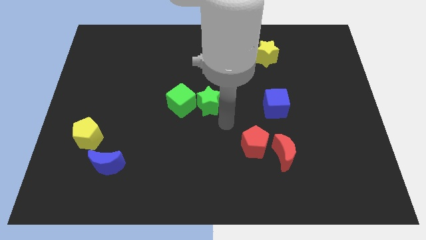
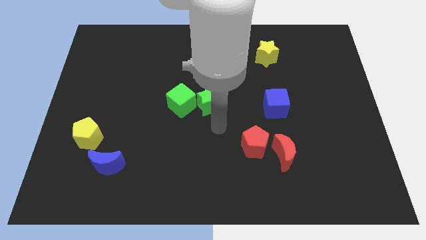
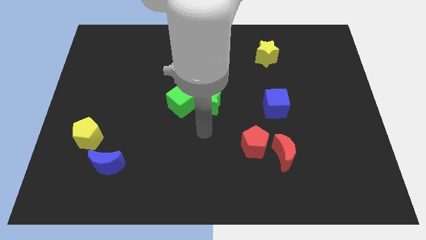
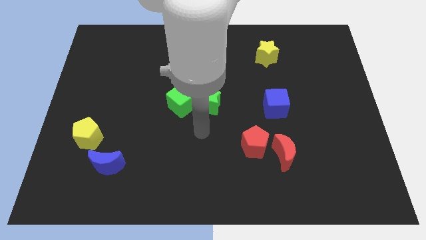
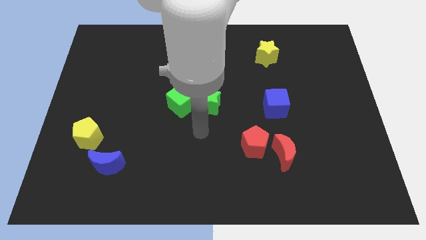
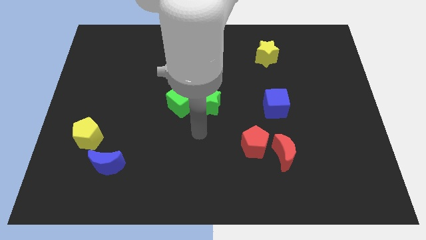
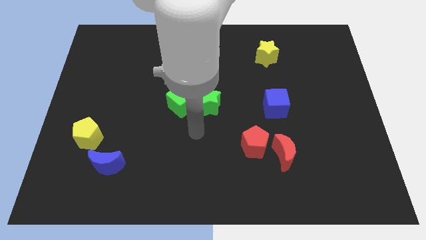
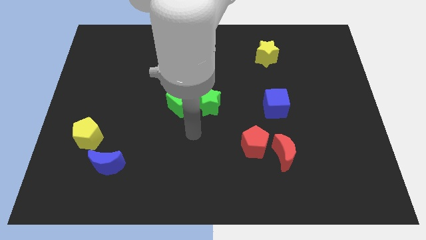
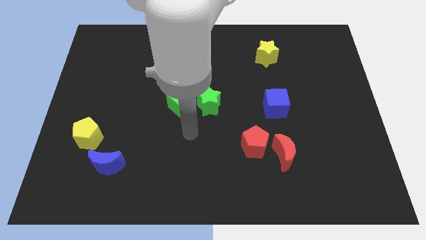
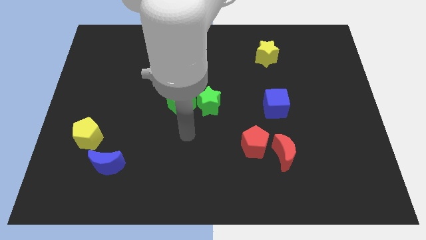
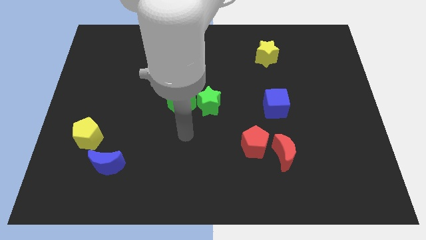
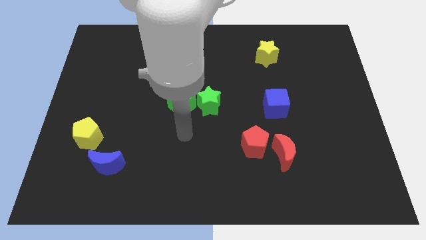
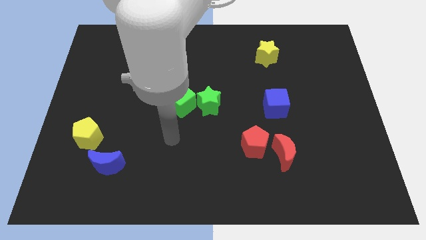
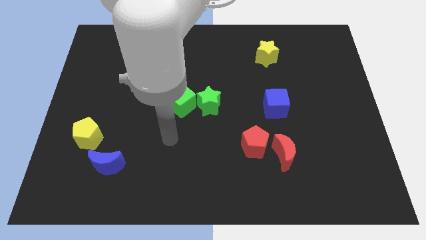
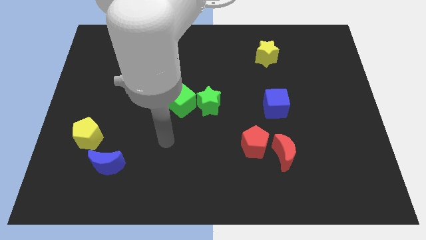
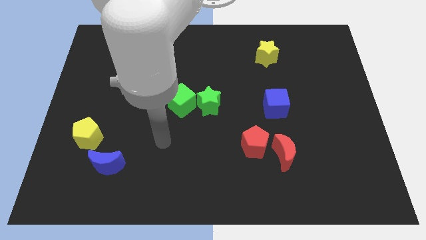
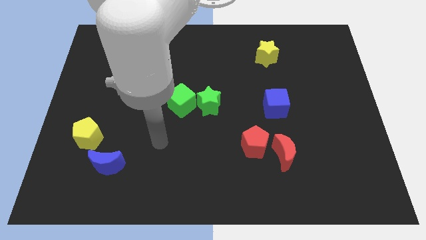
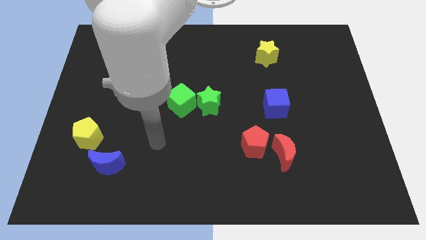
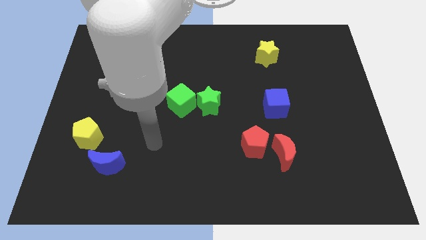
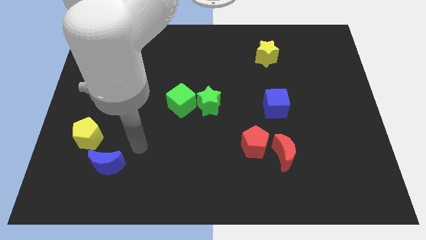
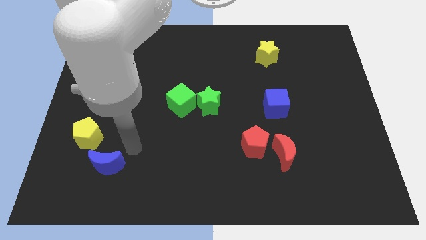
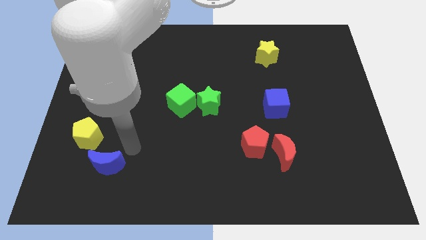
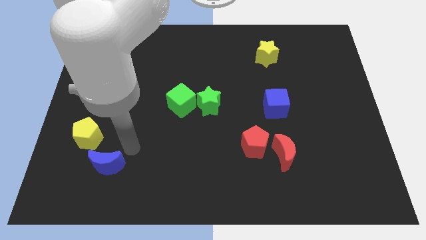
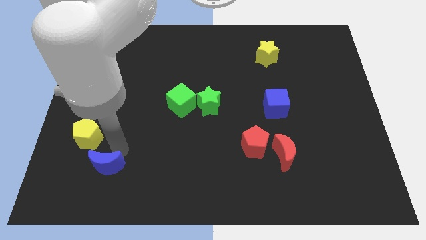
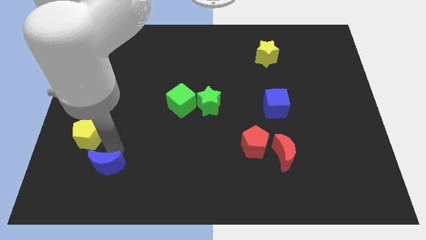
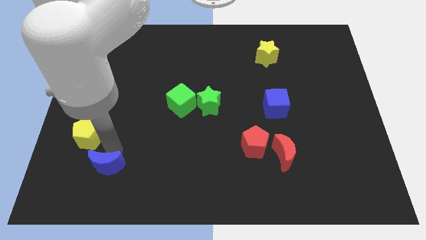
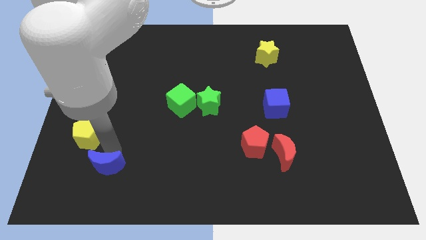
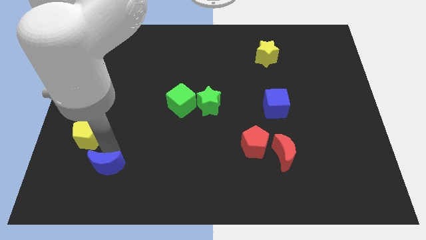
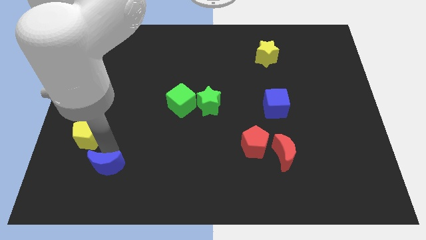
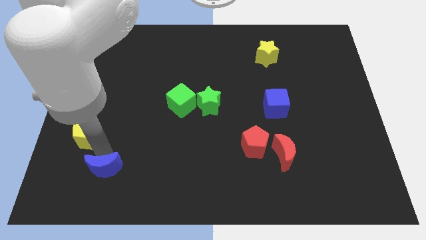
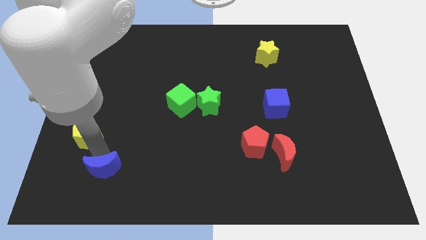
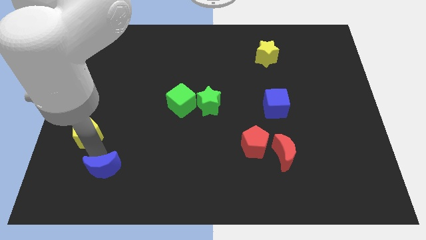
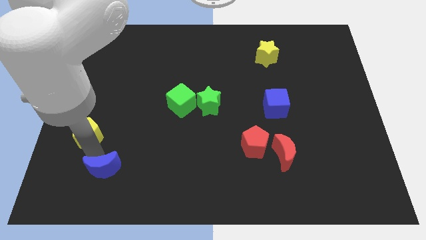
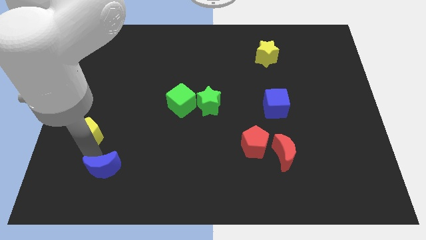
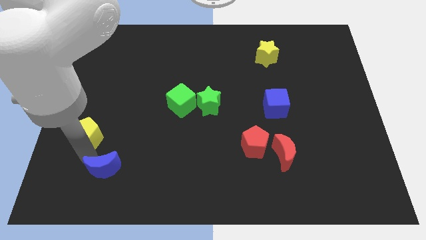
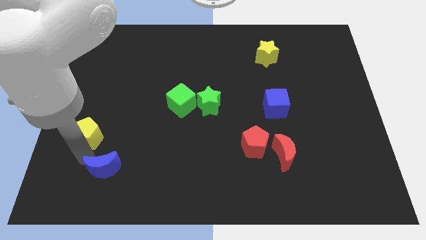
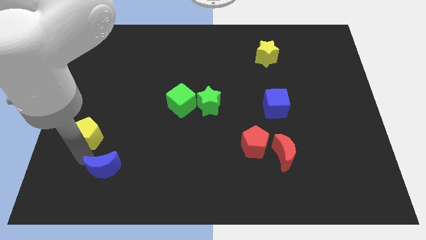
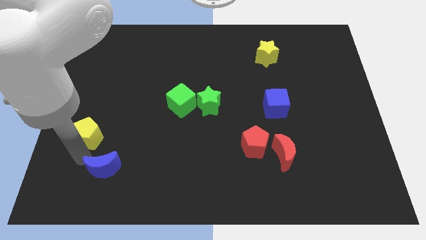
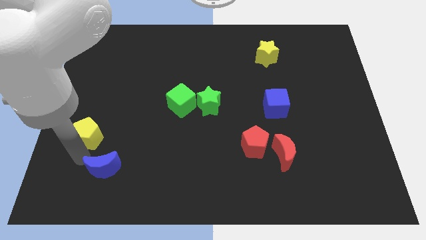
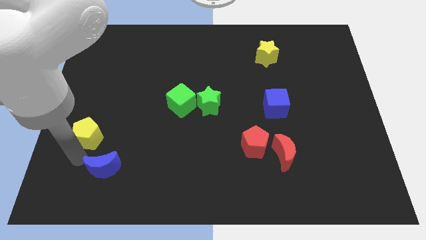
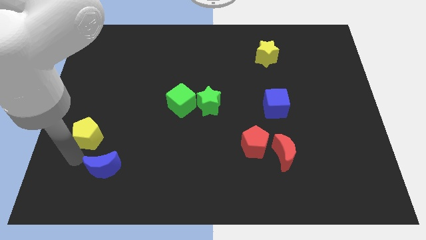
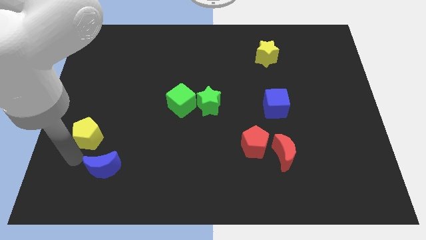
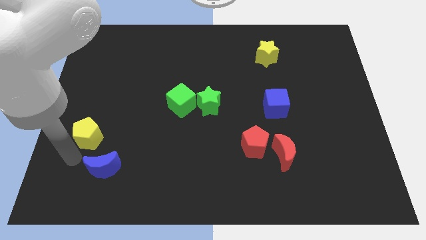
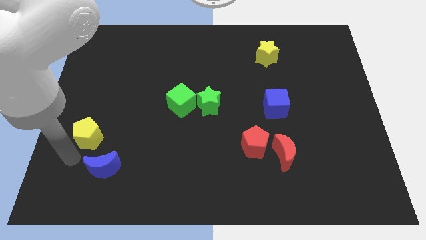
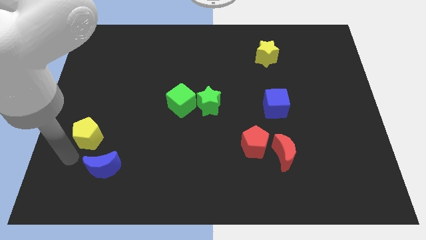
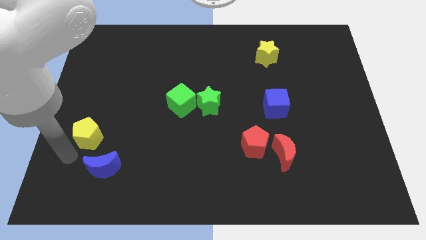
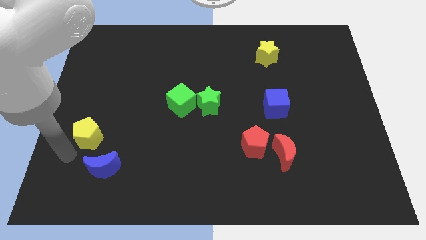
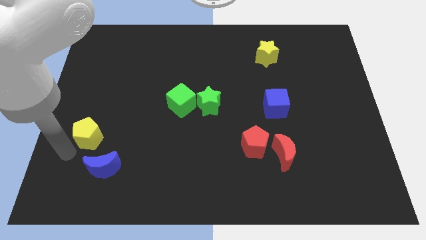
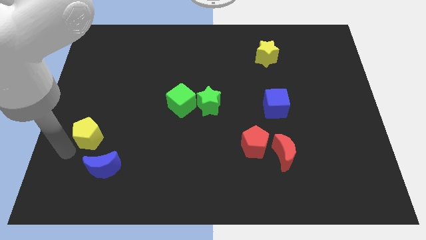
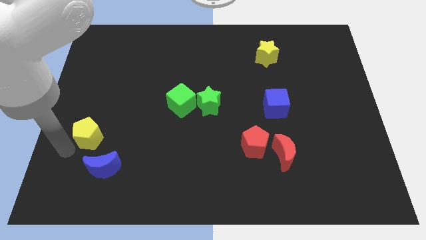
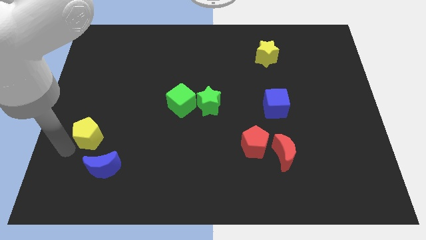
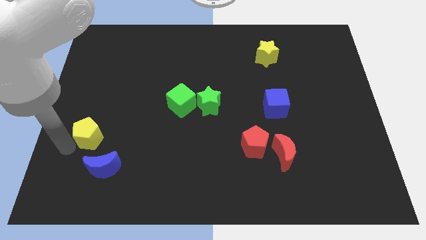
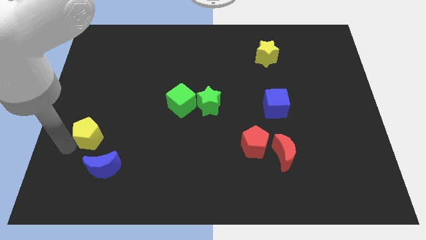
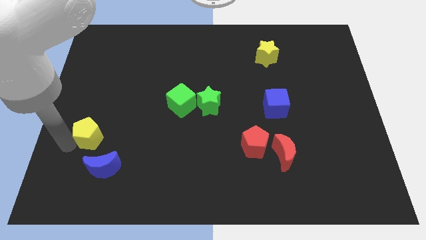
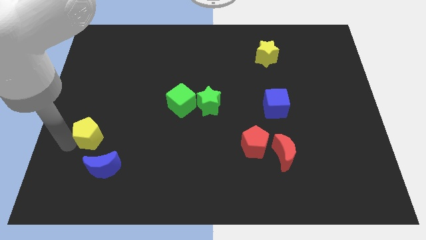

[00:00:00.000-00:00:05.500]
move your arm at the bottom left side of the yellow pentagon

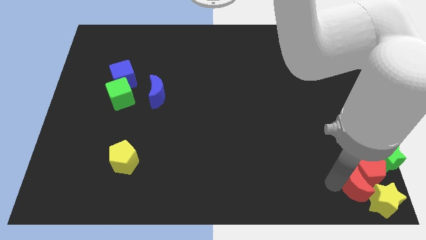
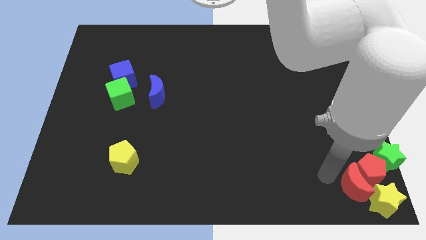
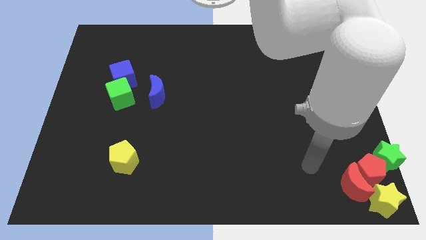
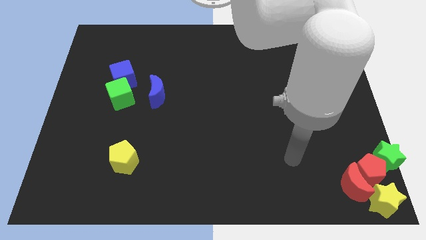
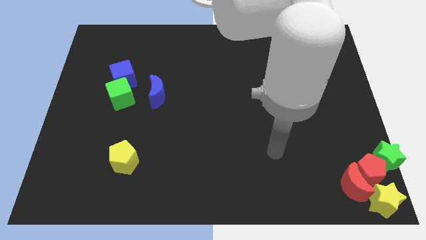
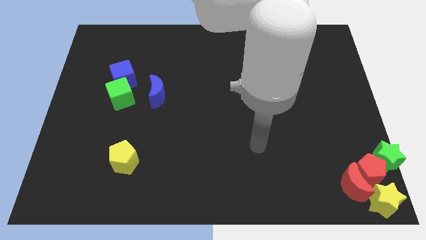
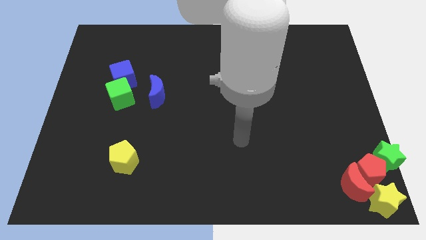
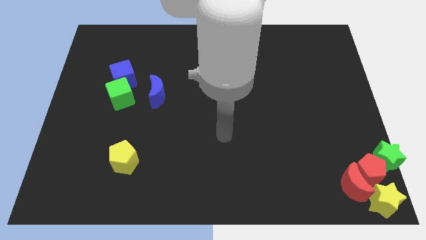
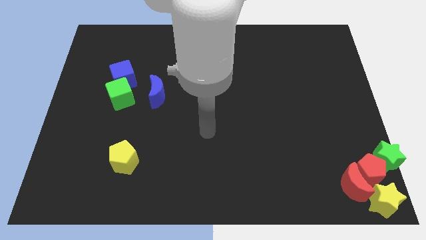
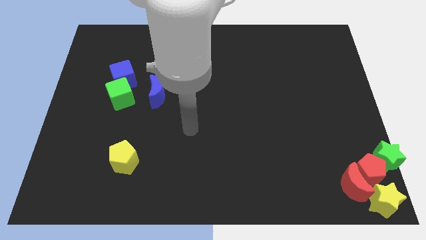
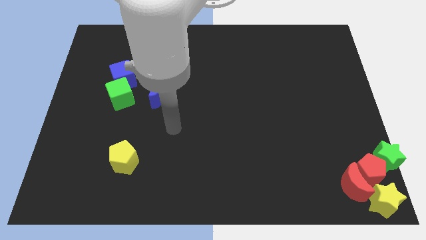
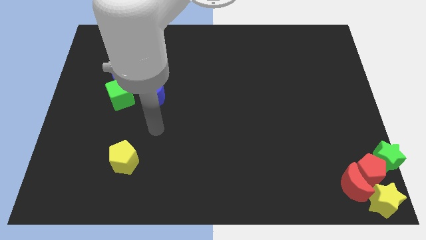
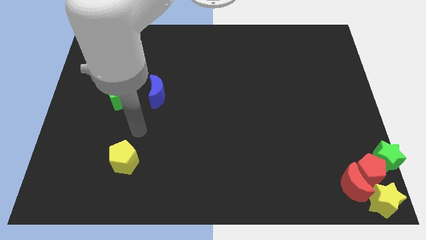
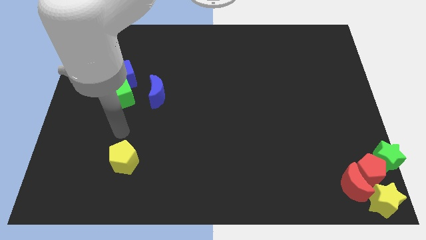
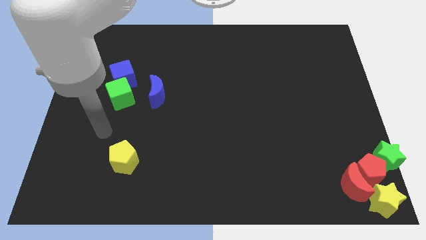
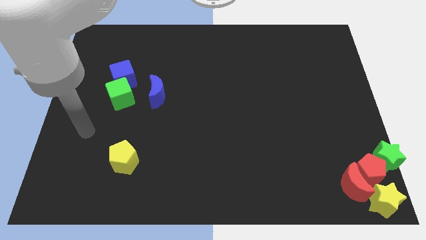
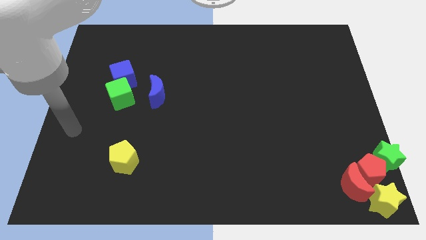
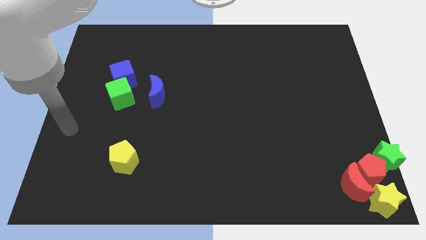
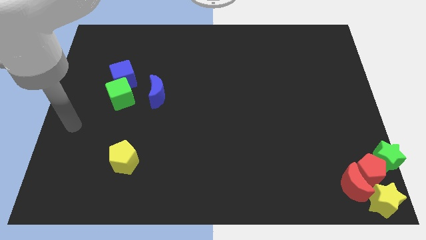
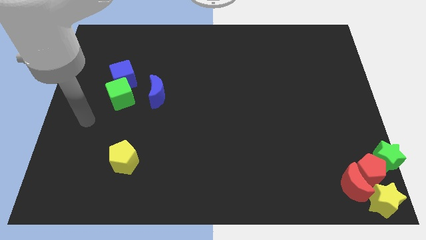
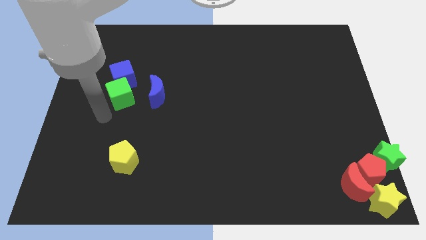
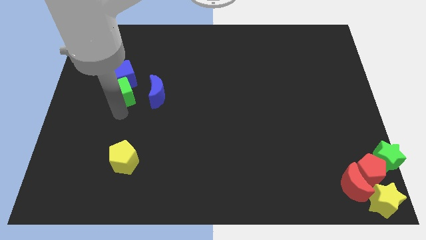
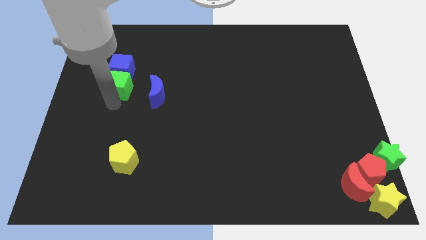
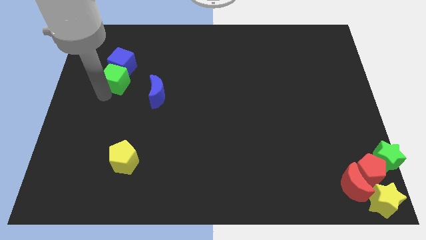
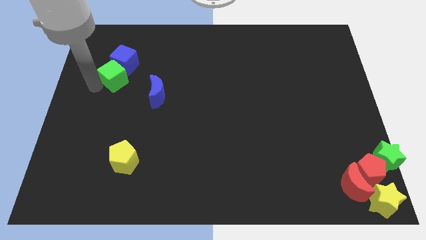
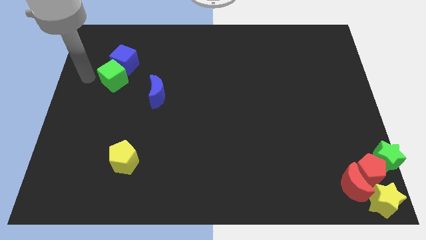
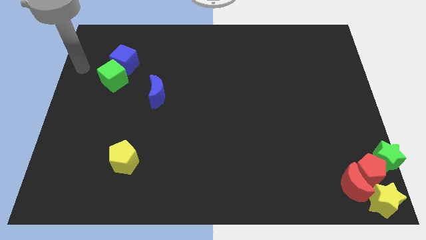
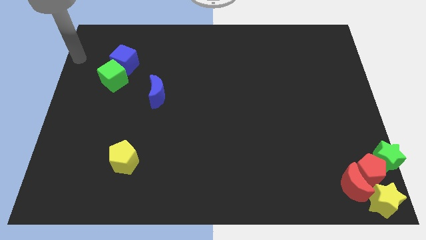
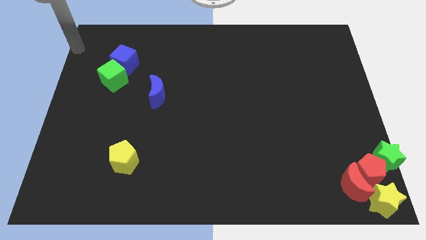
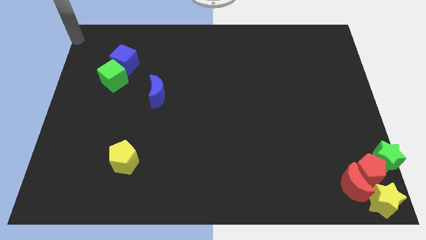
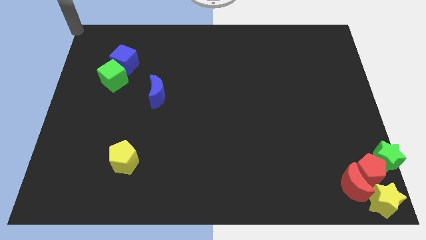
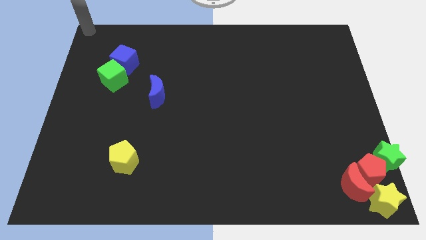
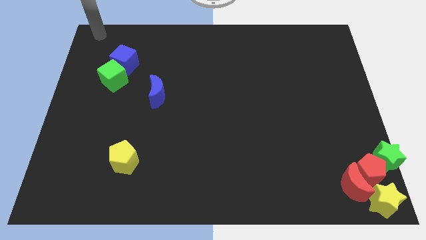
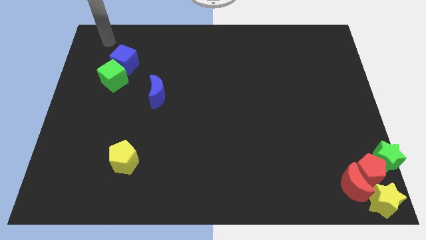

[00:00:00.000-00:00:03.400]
move the arm towards the top of the blue cube
